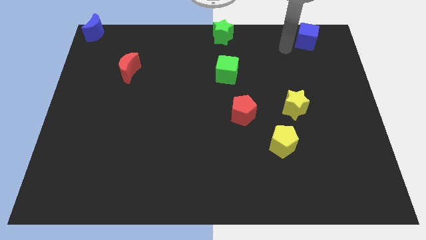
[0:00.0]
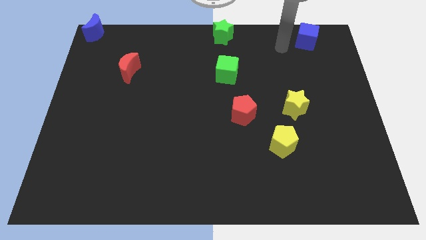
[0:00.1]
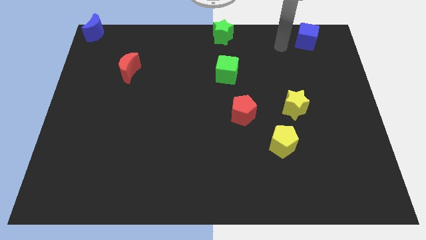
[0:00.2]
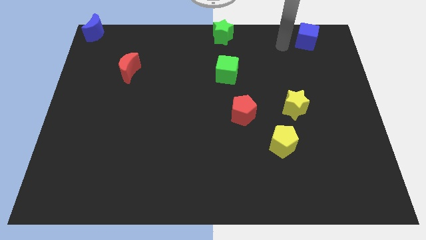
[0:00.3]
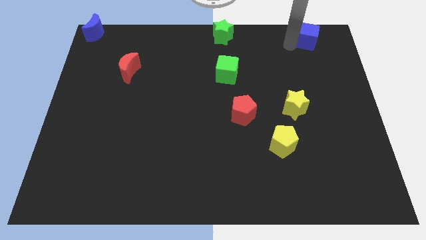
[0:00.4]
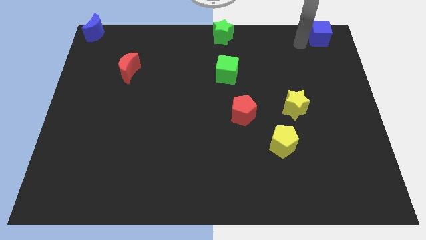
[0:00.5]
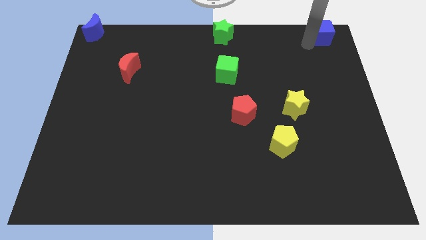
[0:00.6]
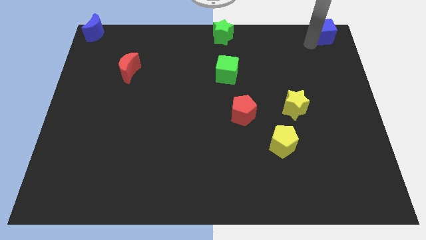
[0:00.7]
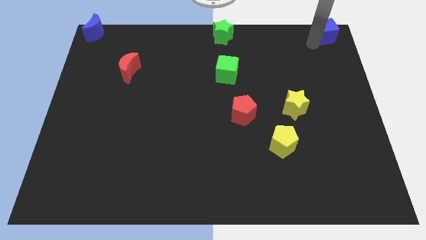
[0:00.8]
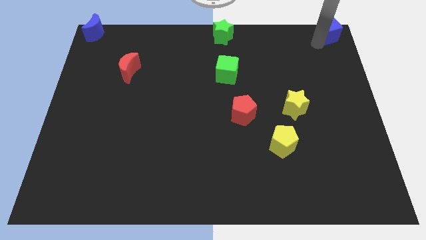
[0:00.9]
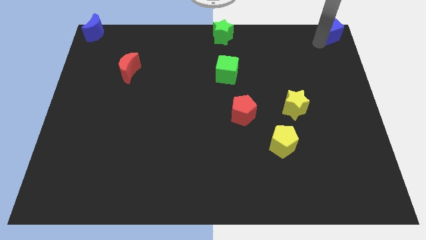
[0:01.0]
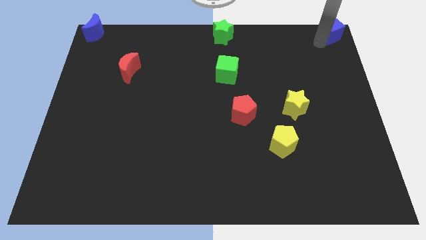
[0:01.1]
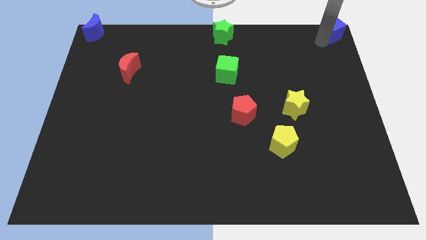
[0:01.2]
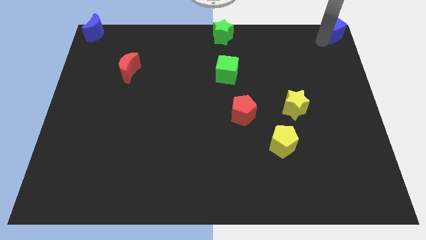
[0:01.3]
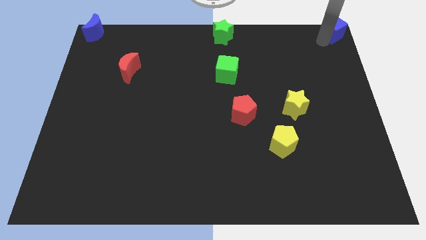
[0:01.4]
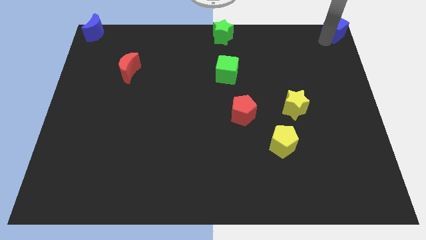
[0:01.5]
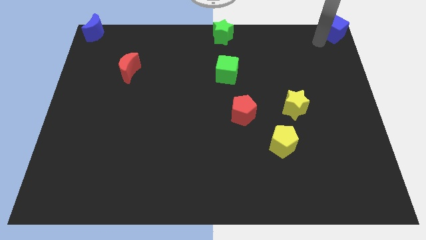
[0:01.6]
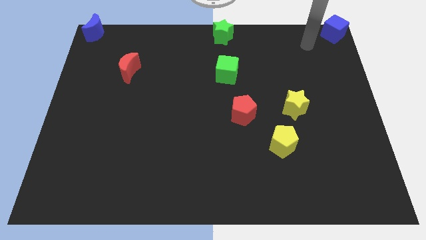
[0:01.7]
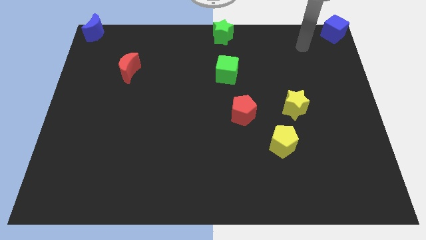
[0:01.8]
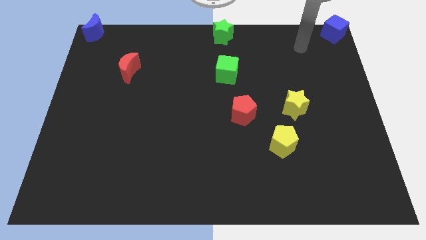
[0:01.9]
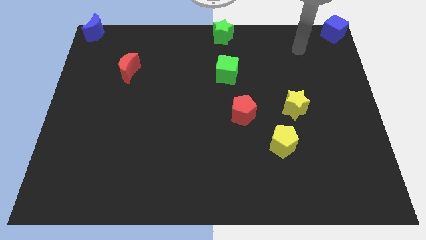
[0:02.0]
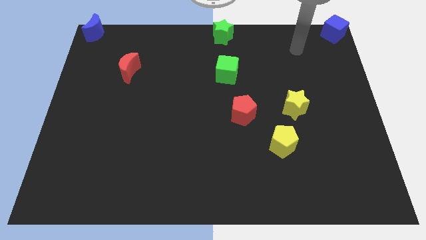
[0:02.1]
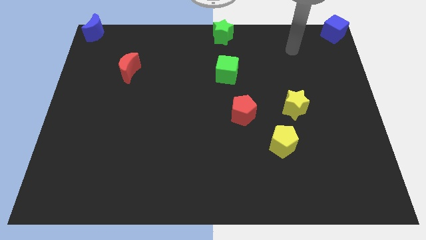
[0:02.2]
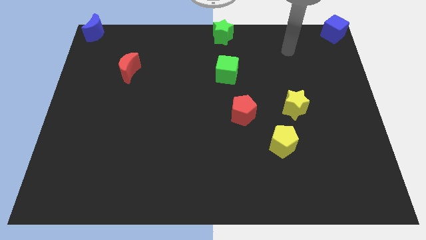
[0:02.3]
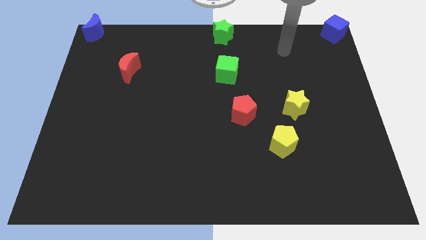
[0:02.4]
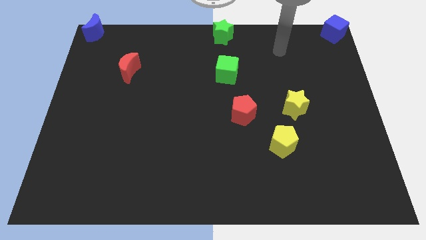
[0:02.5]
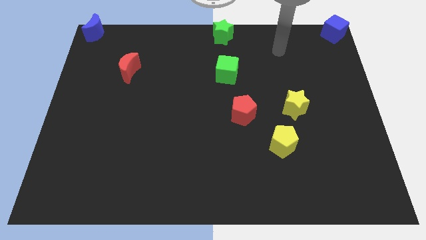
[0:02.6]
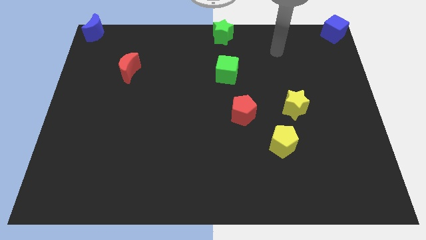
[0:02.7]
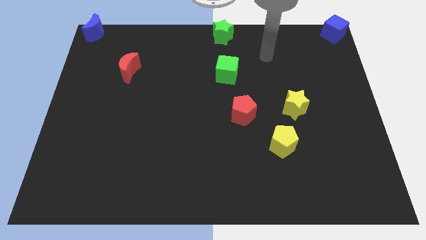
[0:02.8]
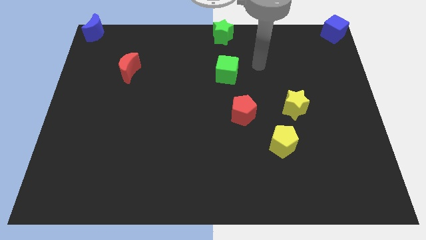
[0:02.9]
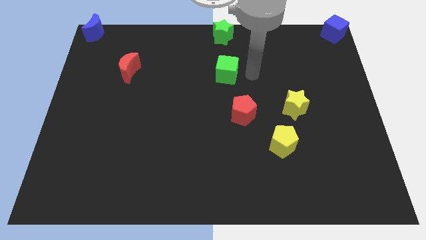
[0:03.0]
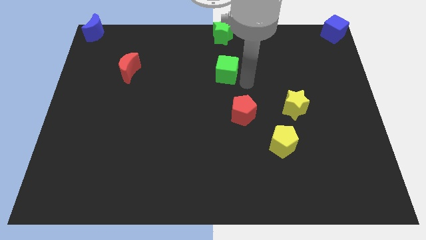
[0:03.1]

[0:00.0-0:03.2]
push the blue cube to the top right corner of the board

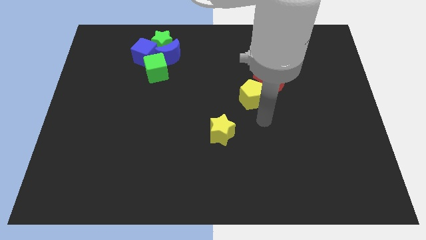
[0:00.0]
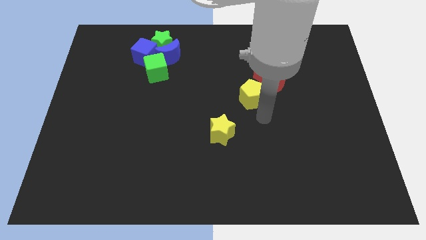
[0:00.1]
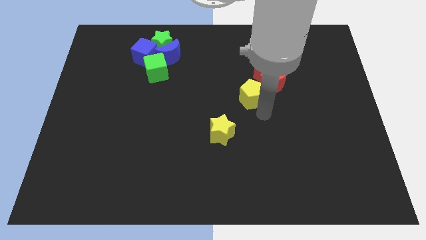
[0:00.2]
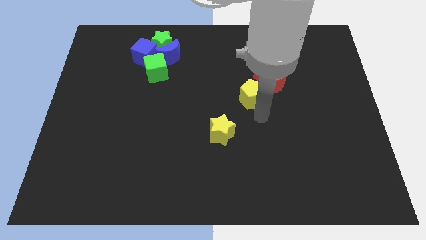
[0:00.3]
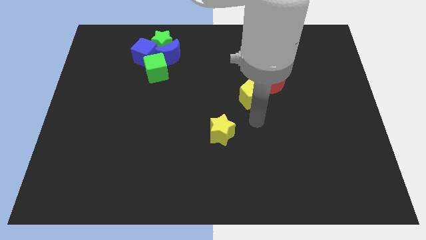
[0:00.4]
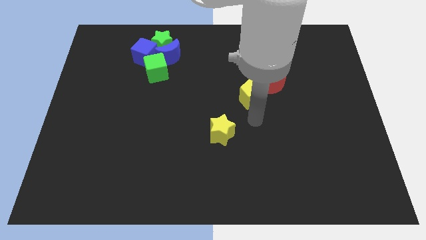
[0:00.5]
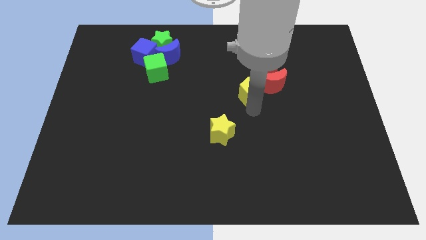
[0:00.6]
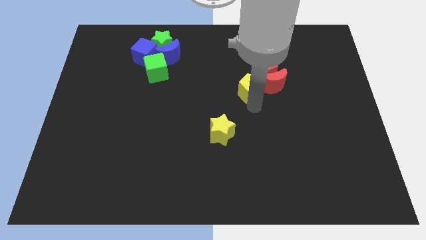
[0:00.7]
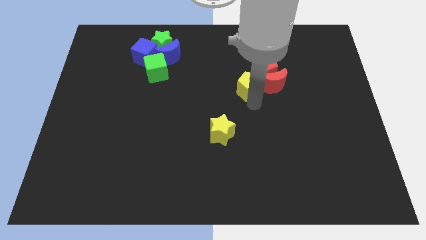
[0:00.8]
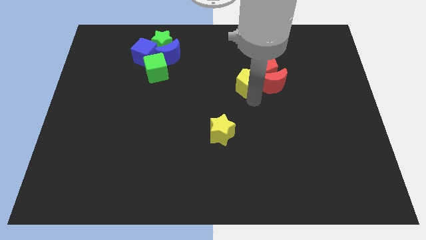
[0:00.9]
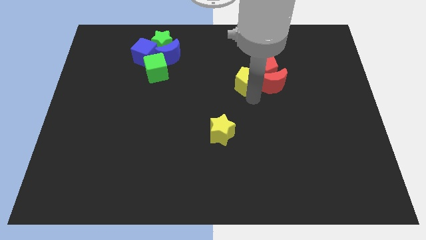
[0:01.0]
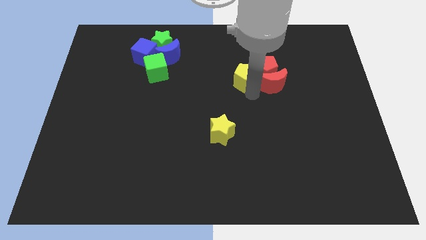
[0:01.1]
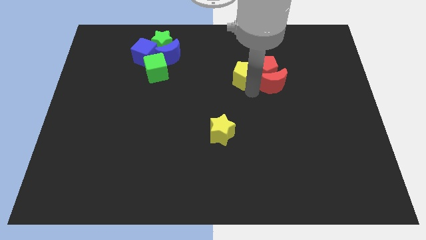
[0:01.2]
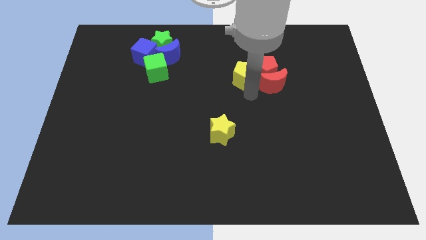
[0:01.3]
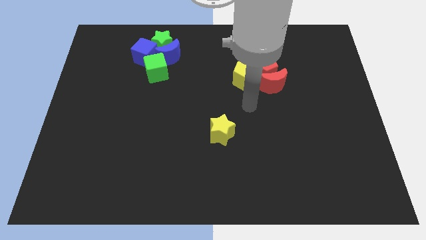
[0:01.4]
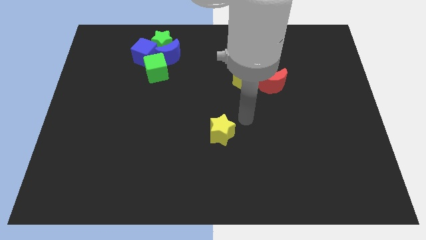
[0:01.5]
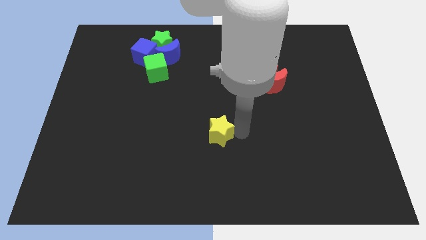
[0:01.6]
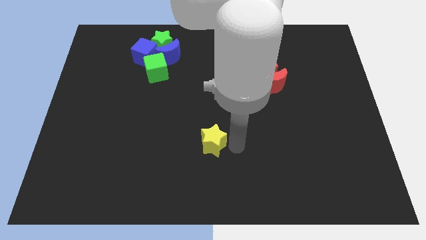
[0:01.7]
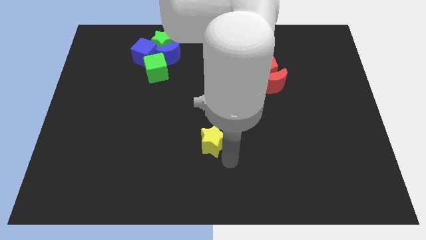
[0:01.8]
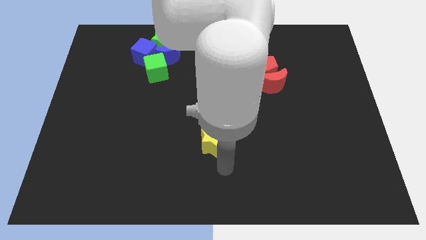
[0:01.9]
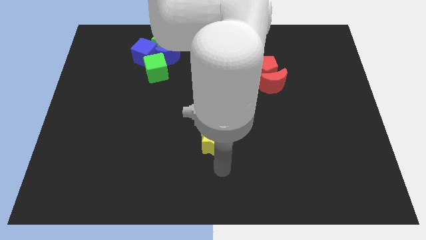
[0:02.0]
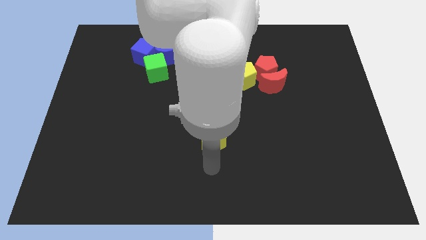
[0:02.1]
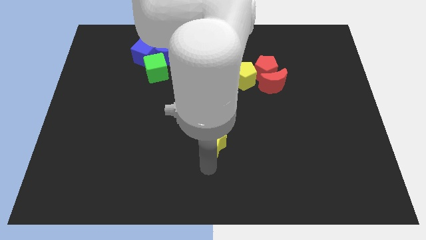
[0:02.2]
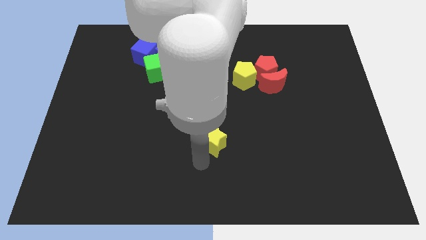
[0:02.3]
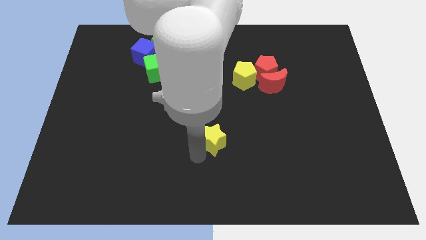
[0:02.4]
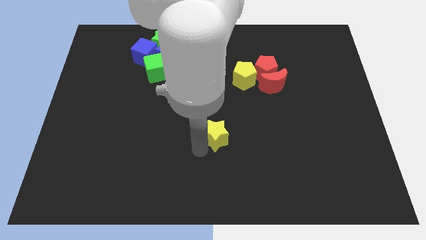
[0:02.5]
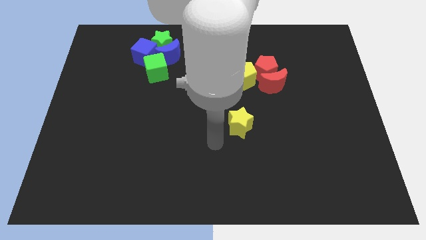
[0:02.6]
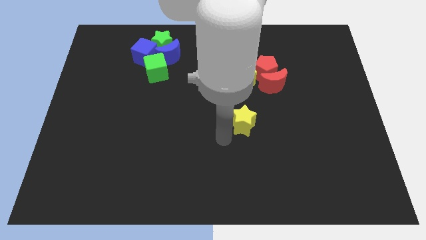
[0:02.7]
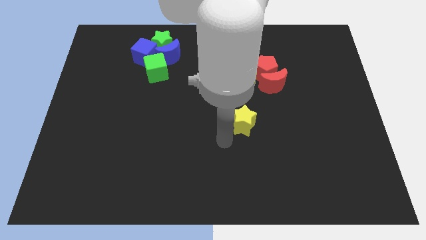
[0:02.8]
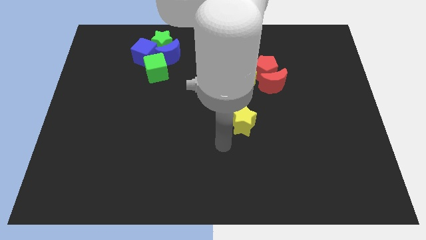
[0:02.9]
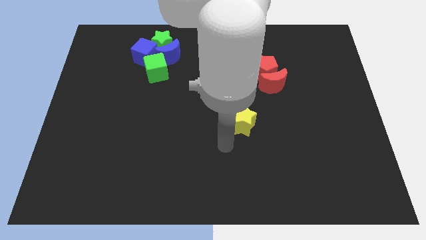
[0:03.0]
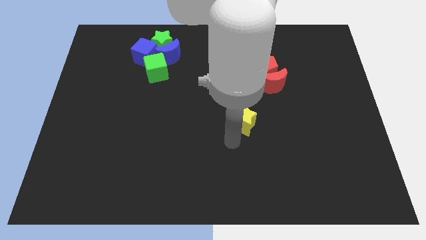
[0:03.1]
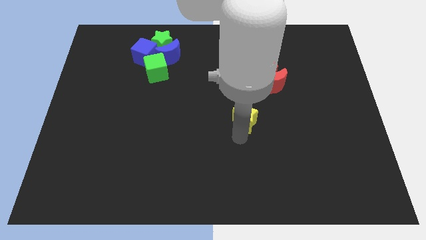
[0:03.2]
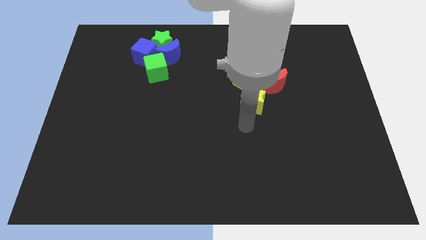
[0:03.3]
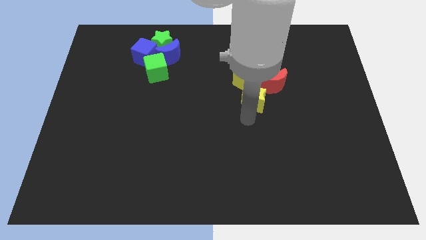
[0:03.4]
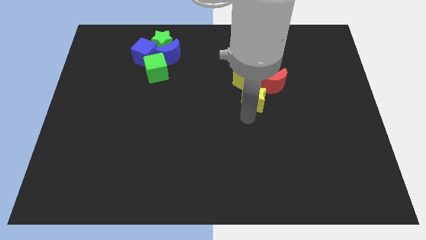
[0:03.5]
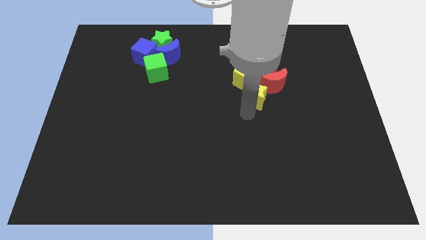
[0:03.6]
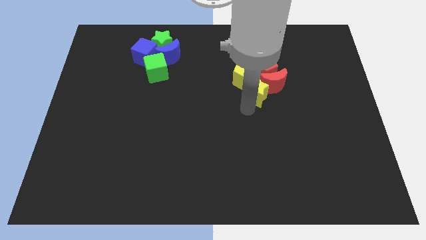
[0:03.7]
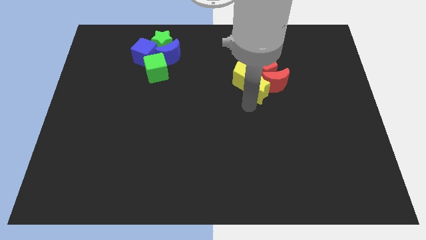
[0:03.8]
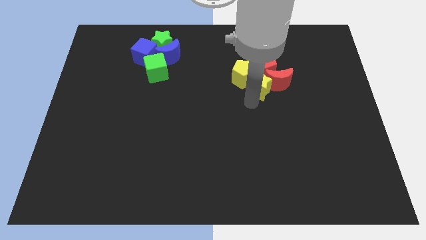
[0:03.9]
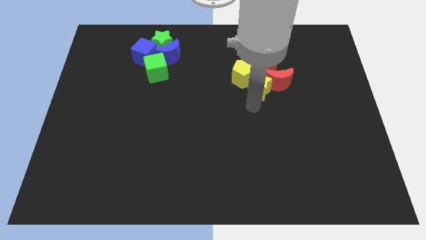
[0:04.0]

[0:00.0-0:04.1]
push the yellow star into the group of blocks

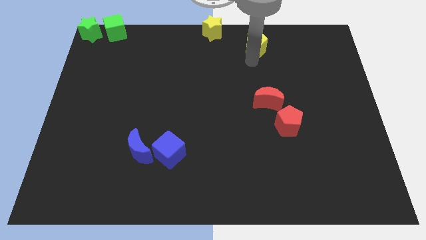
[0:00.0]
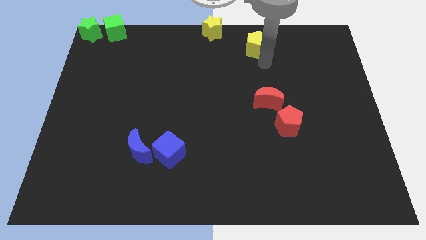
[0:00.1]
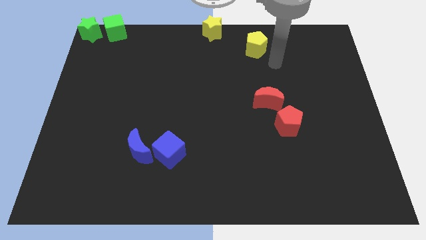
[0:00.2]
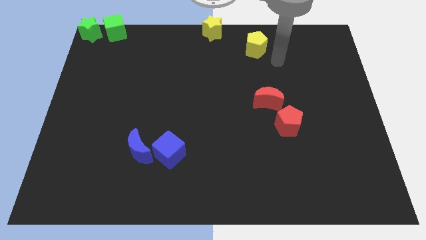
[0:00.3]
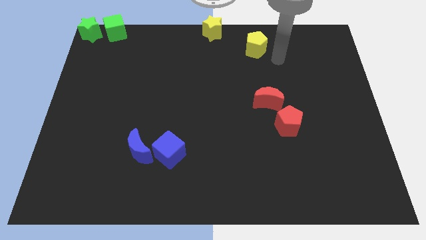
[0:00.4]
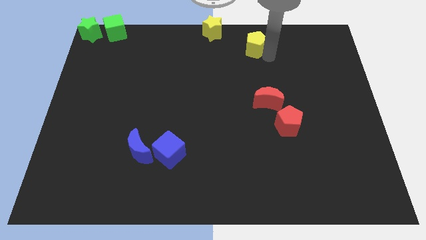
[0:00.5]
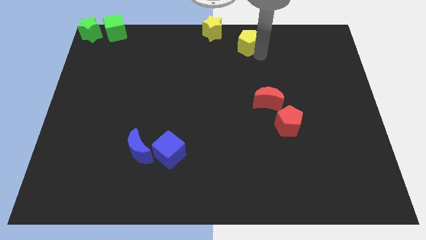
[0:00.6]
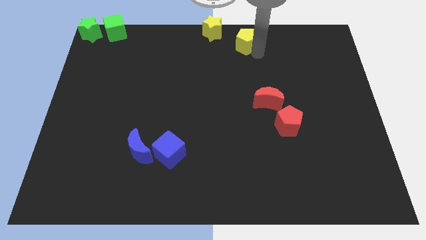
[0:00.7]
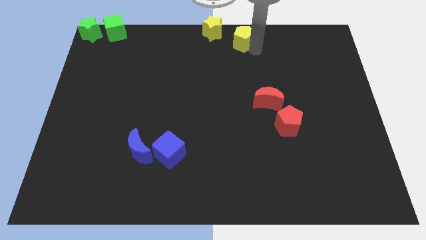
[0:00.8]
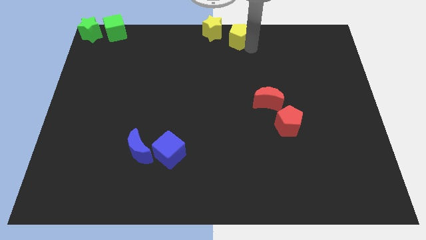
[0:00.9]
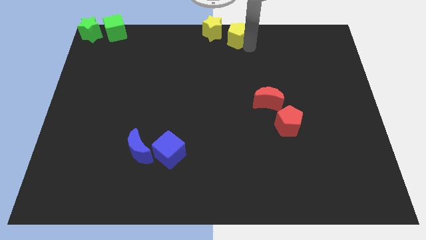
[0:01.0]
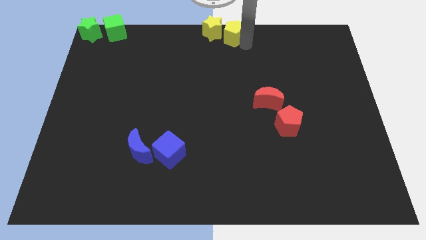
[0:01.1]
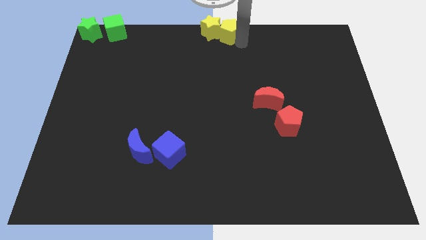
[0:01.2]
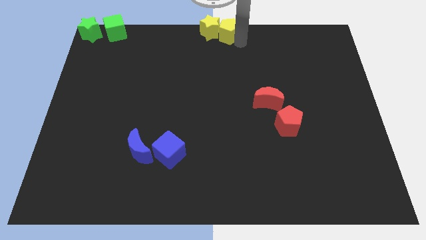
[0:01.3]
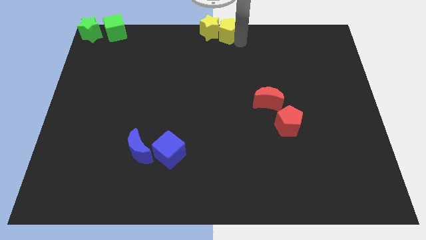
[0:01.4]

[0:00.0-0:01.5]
place yellow pentagon to the right of yellow star

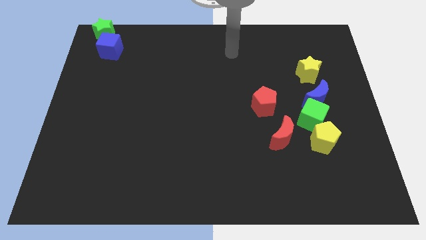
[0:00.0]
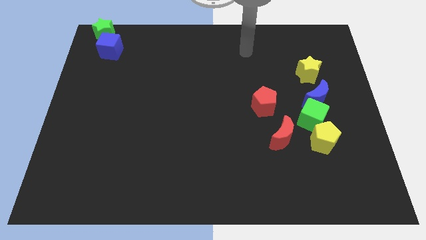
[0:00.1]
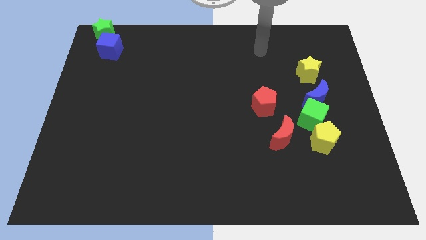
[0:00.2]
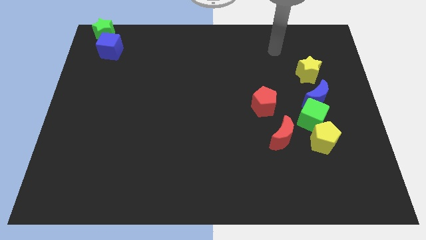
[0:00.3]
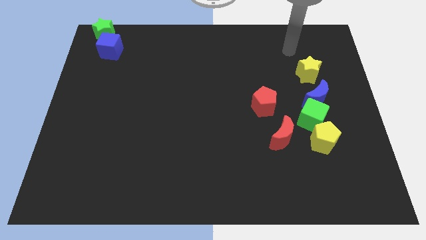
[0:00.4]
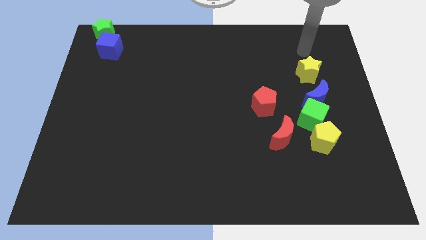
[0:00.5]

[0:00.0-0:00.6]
move arm above yellow star
